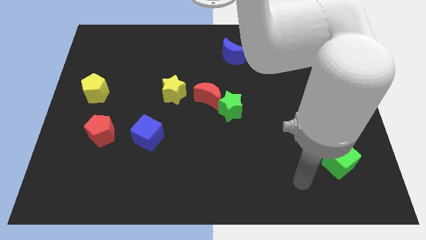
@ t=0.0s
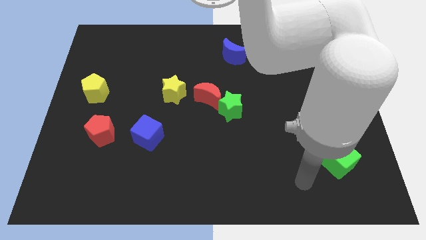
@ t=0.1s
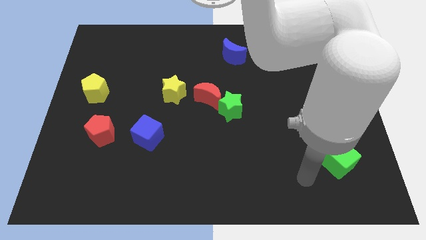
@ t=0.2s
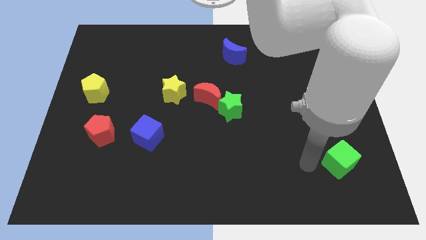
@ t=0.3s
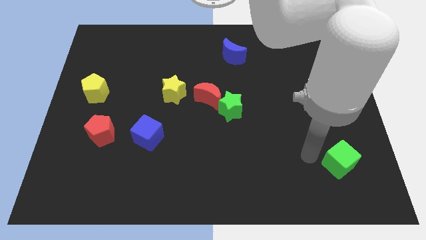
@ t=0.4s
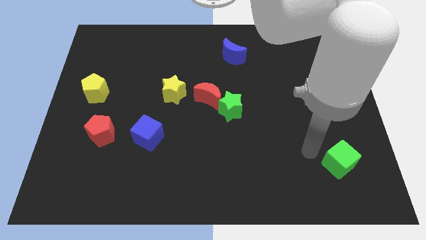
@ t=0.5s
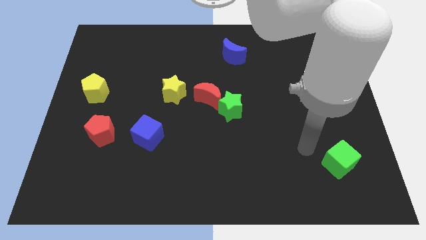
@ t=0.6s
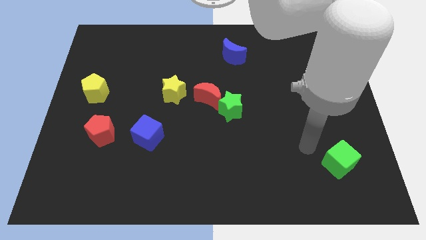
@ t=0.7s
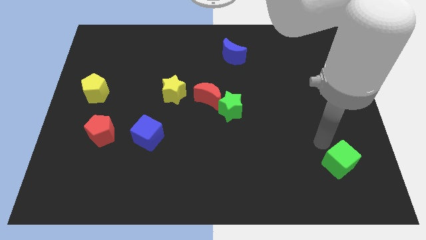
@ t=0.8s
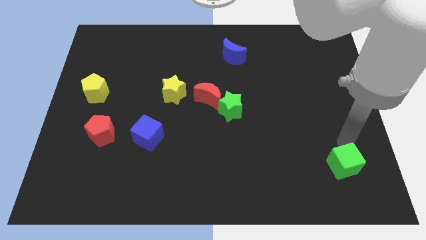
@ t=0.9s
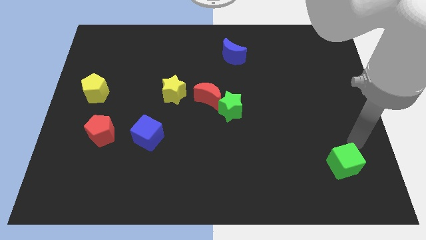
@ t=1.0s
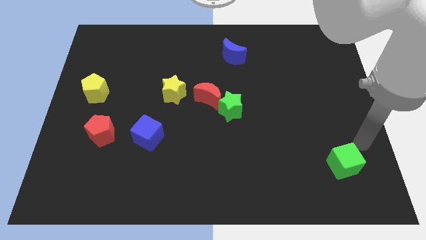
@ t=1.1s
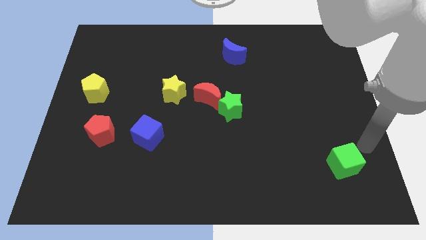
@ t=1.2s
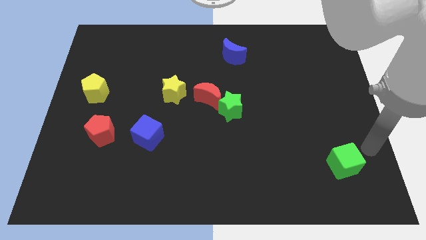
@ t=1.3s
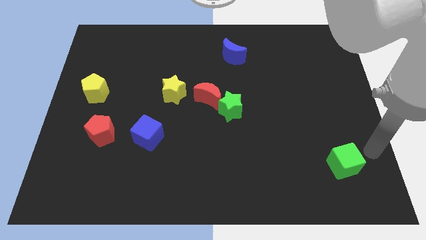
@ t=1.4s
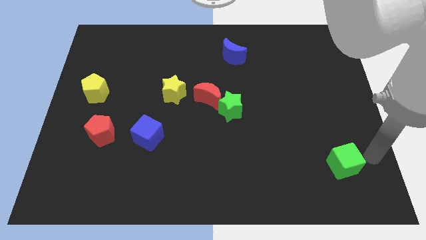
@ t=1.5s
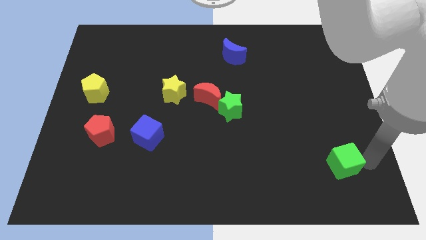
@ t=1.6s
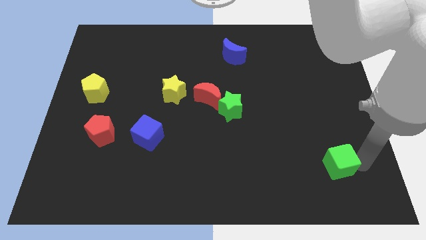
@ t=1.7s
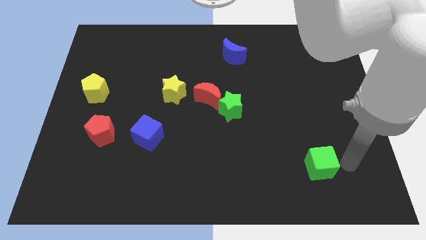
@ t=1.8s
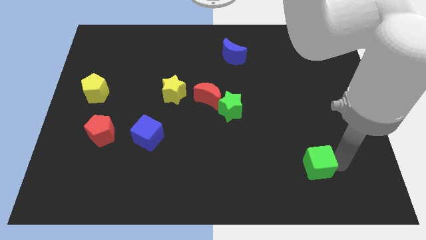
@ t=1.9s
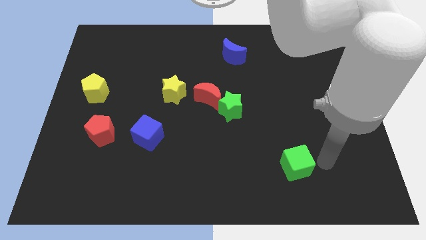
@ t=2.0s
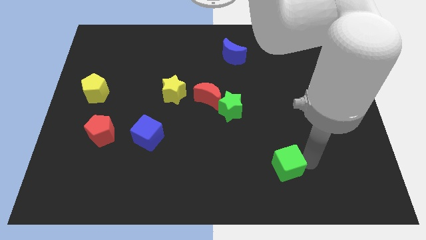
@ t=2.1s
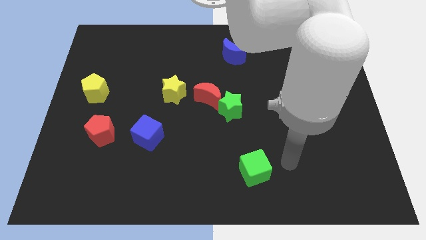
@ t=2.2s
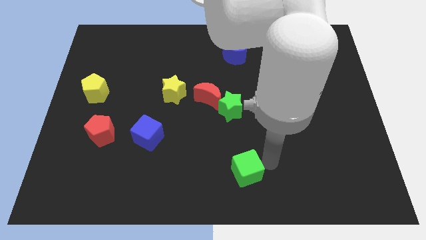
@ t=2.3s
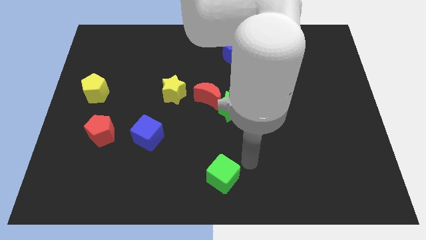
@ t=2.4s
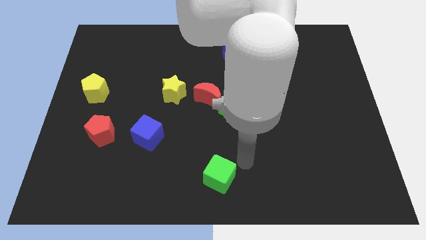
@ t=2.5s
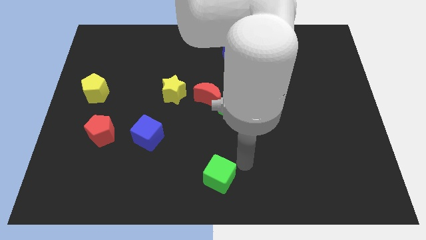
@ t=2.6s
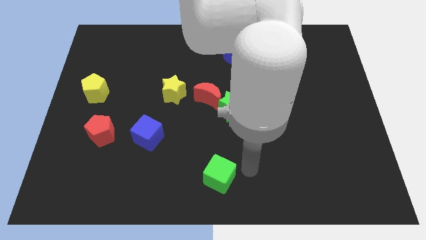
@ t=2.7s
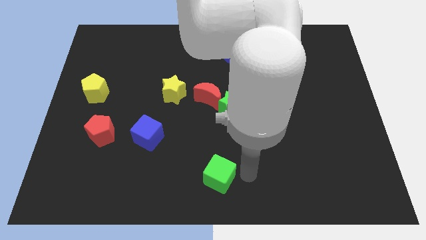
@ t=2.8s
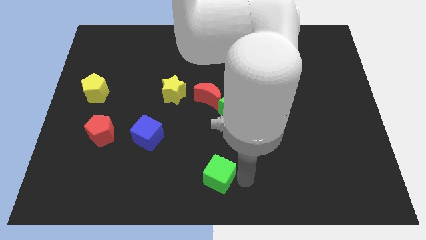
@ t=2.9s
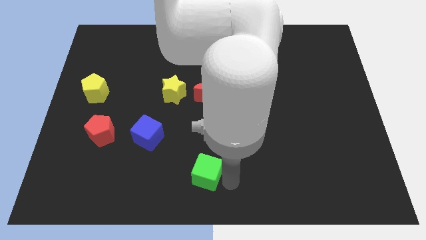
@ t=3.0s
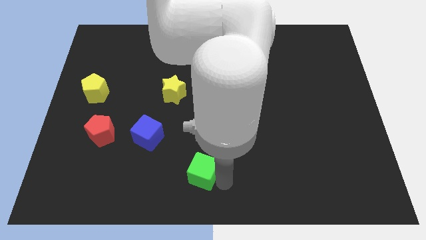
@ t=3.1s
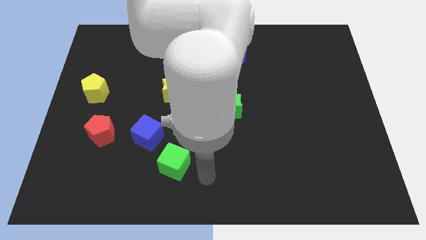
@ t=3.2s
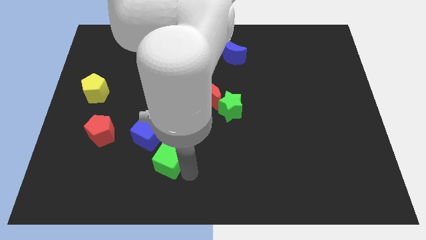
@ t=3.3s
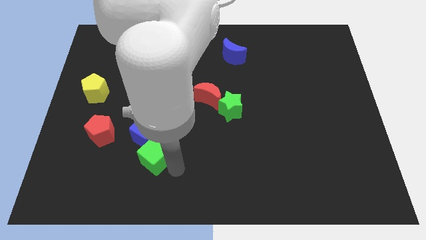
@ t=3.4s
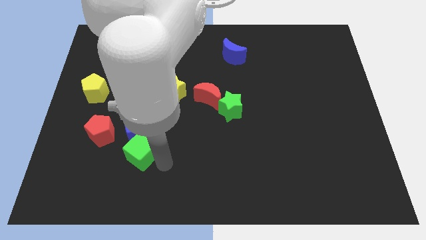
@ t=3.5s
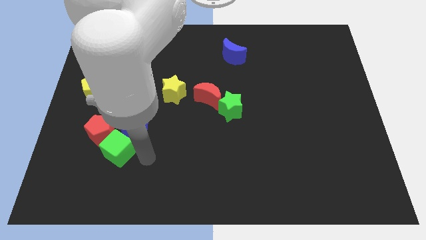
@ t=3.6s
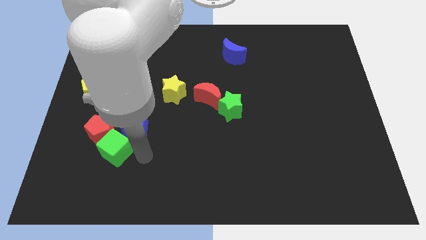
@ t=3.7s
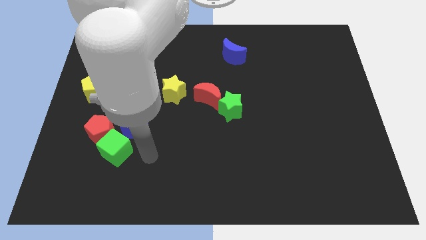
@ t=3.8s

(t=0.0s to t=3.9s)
slide the green cube to the red pentagon

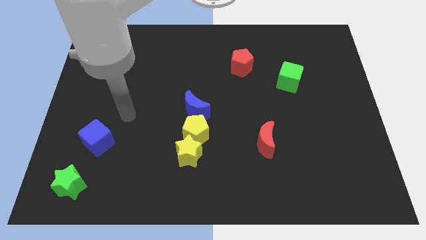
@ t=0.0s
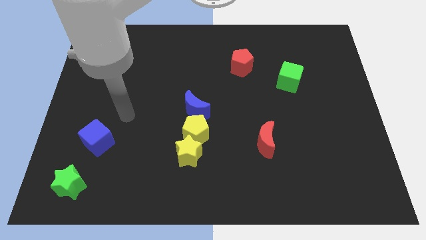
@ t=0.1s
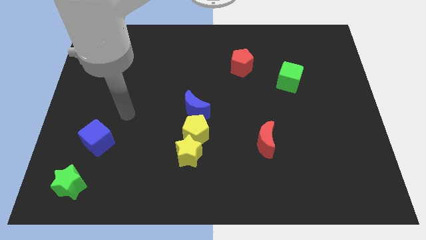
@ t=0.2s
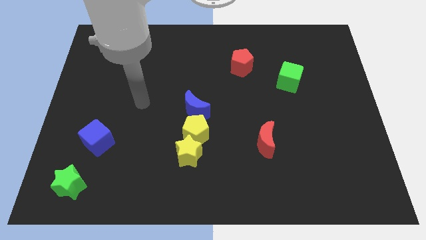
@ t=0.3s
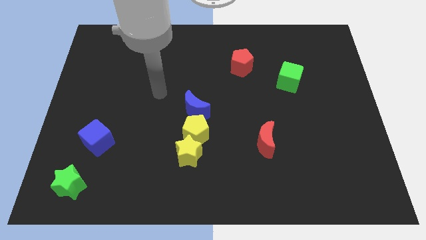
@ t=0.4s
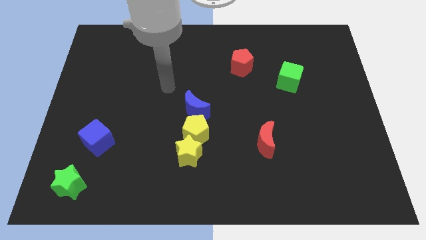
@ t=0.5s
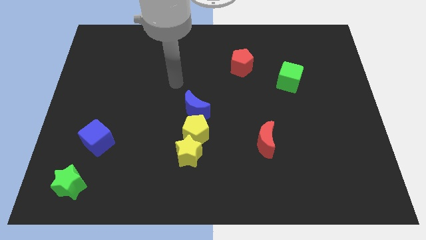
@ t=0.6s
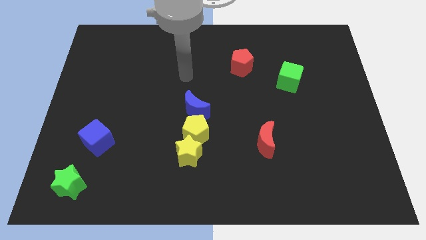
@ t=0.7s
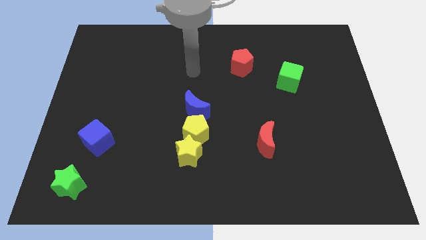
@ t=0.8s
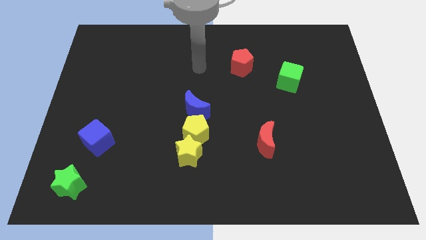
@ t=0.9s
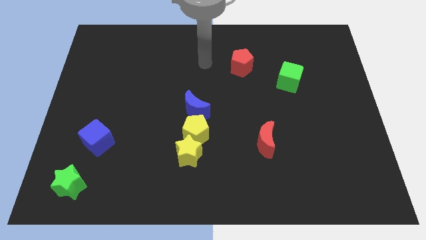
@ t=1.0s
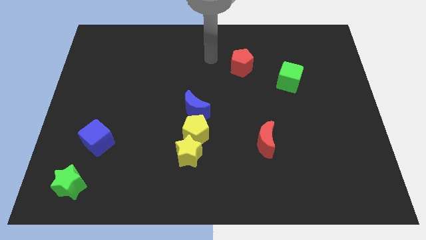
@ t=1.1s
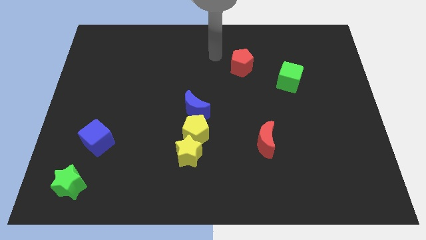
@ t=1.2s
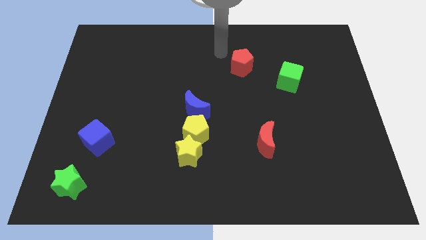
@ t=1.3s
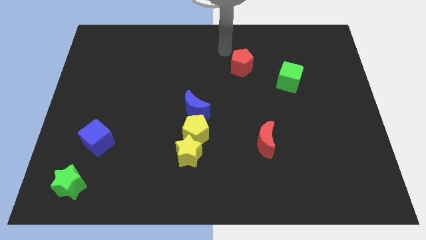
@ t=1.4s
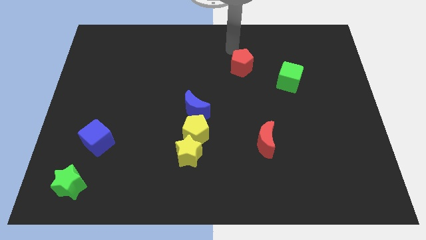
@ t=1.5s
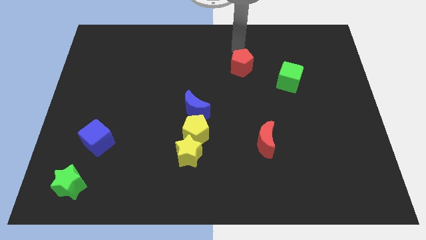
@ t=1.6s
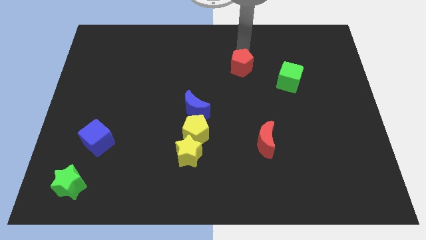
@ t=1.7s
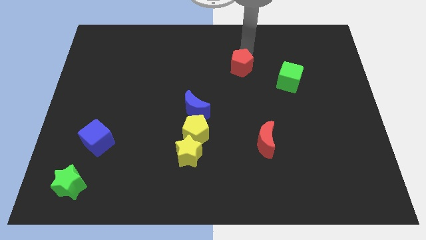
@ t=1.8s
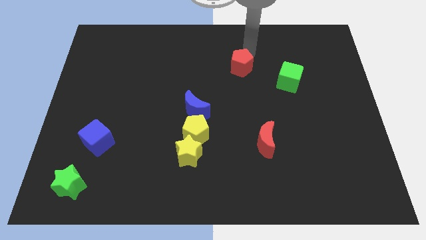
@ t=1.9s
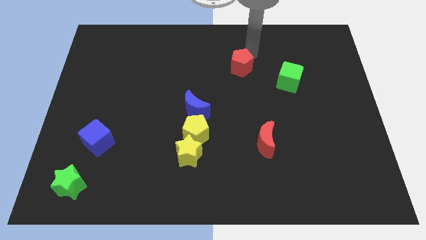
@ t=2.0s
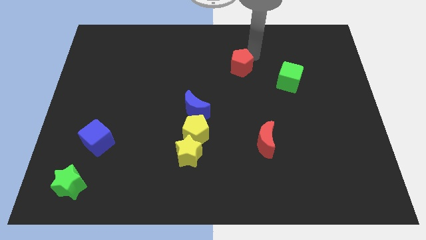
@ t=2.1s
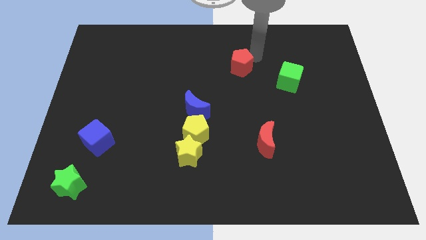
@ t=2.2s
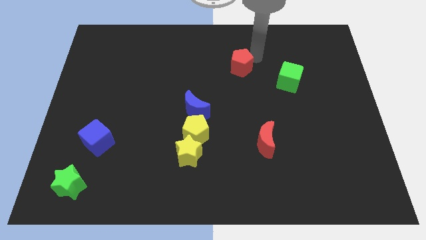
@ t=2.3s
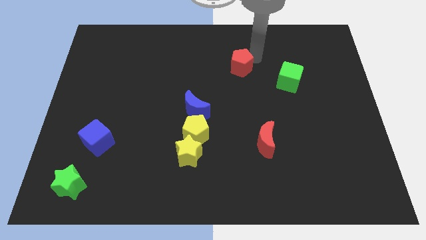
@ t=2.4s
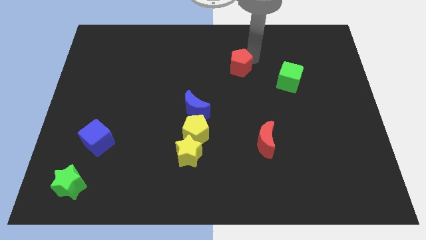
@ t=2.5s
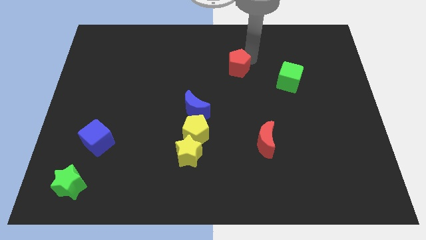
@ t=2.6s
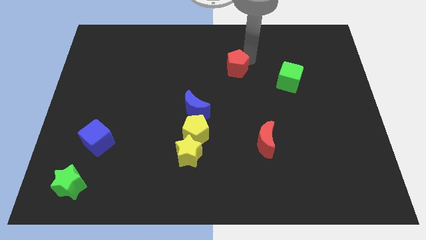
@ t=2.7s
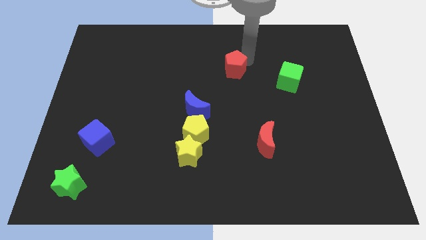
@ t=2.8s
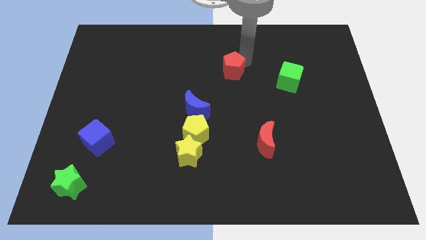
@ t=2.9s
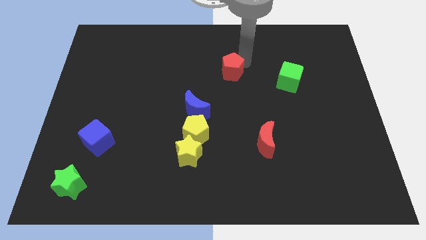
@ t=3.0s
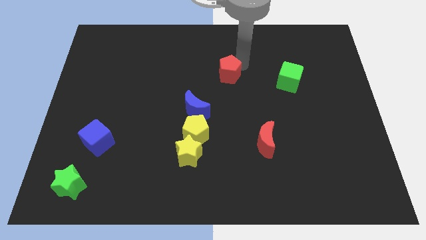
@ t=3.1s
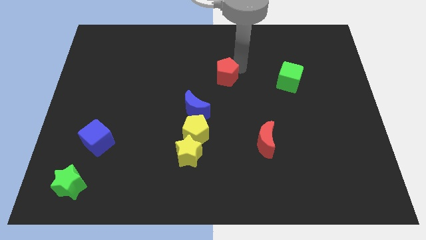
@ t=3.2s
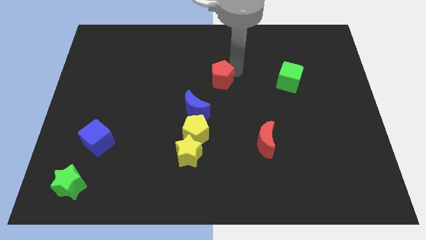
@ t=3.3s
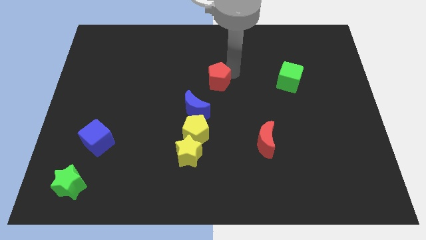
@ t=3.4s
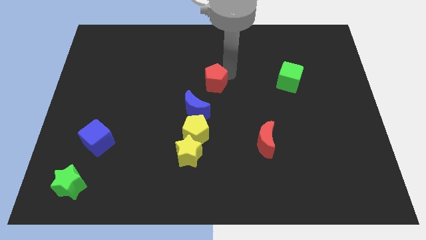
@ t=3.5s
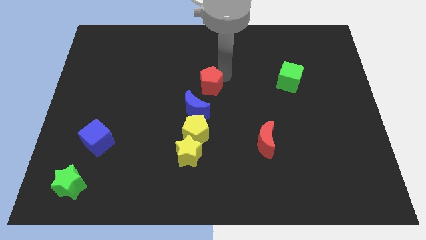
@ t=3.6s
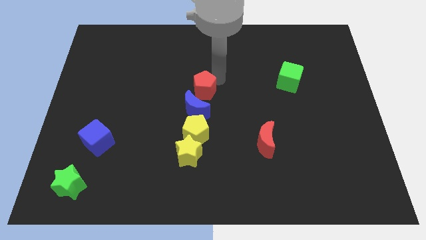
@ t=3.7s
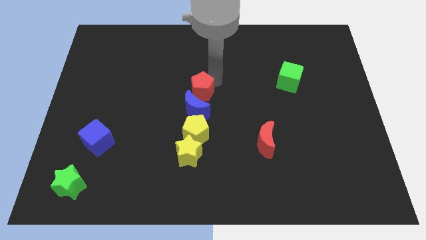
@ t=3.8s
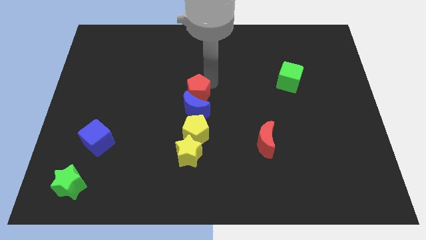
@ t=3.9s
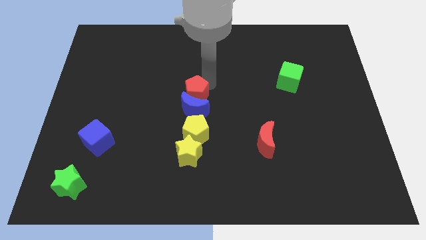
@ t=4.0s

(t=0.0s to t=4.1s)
slide the red pentagon towards the blue moon

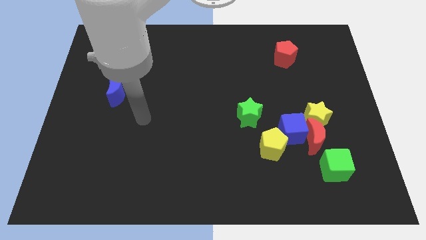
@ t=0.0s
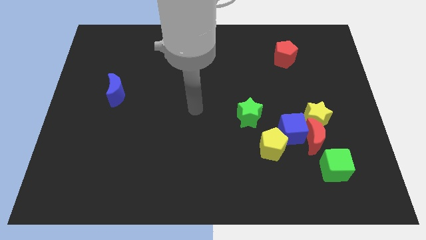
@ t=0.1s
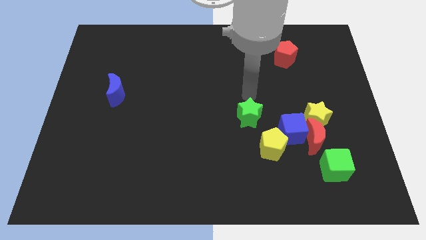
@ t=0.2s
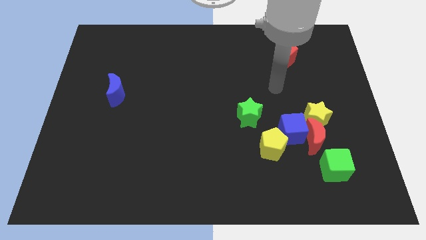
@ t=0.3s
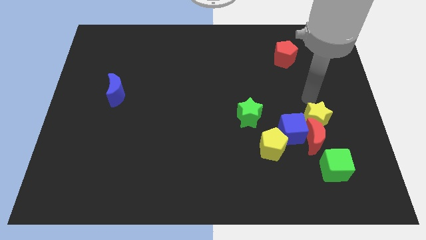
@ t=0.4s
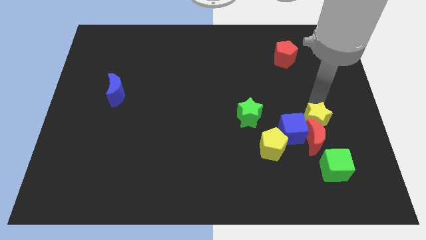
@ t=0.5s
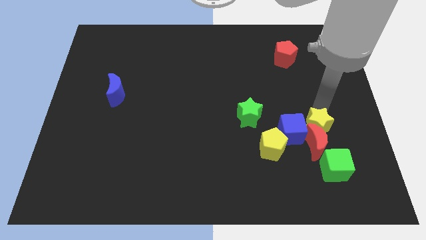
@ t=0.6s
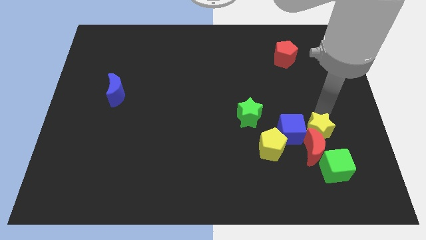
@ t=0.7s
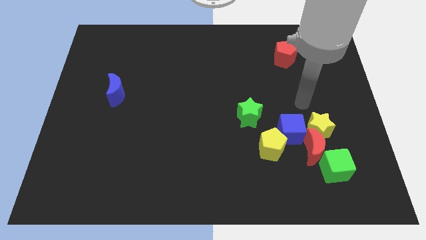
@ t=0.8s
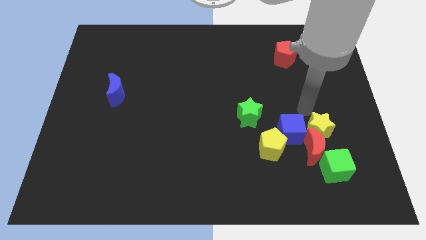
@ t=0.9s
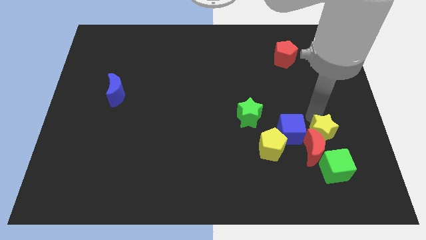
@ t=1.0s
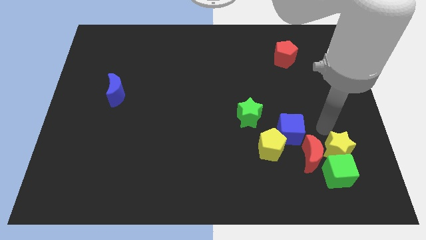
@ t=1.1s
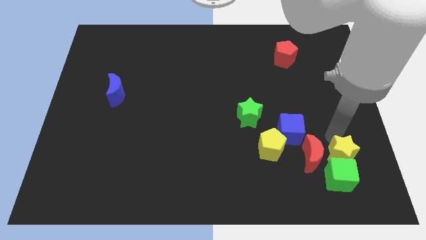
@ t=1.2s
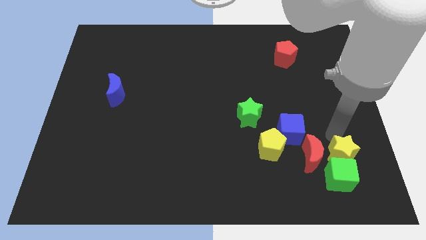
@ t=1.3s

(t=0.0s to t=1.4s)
put the yellow star to the green cube
